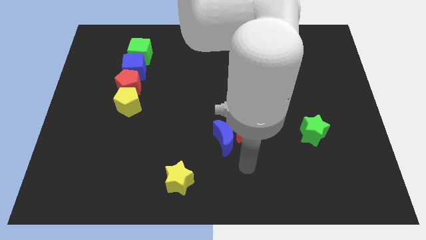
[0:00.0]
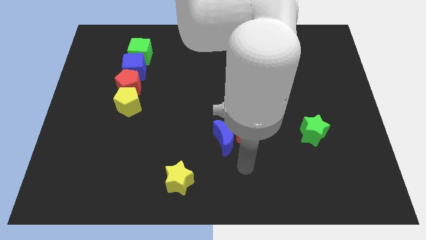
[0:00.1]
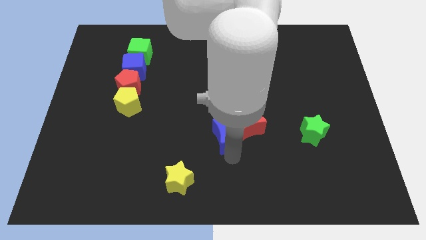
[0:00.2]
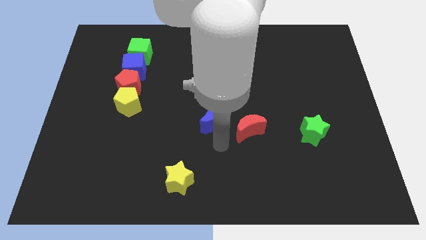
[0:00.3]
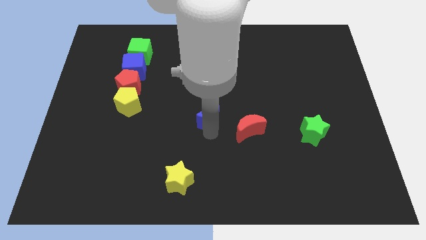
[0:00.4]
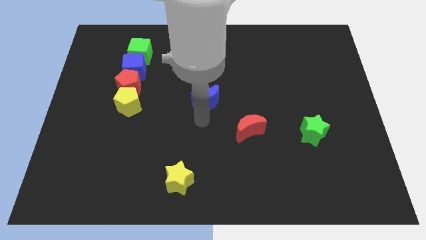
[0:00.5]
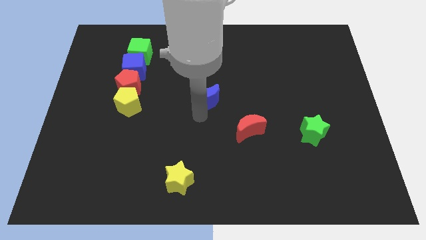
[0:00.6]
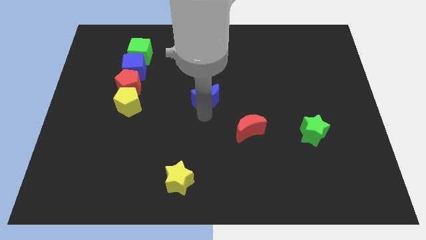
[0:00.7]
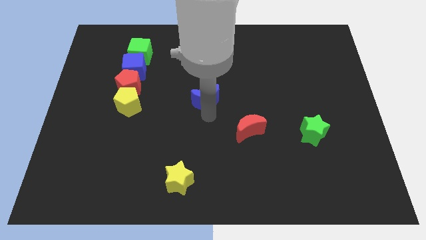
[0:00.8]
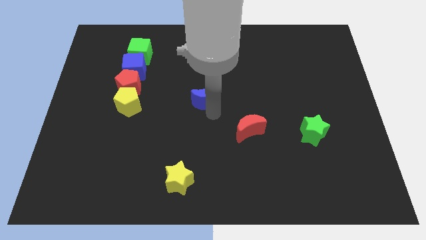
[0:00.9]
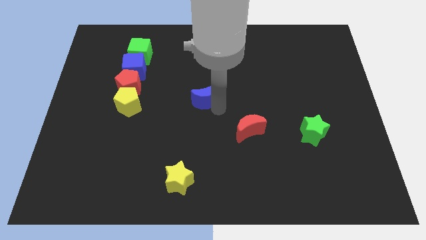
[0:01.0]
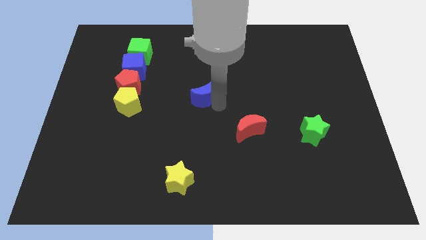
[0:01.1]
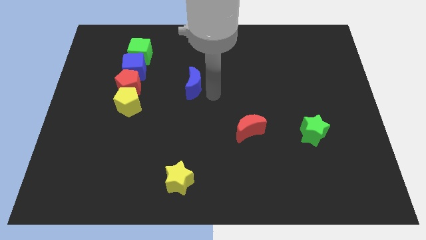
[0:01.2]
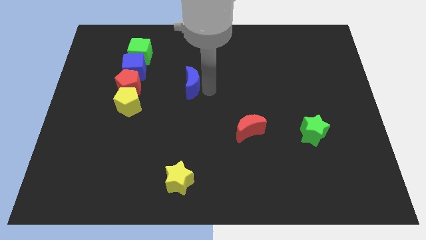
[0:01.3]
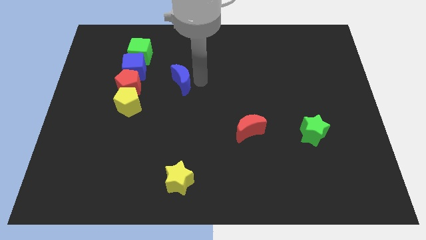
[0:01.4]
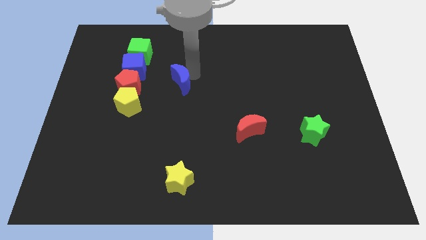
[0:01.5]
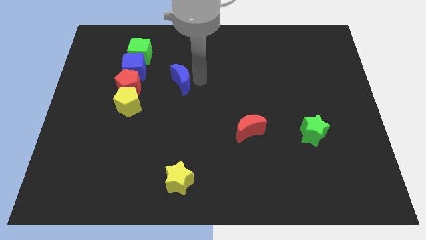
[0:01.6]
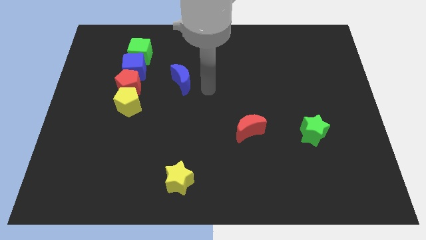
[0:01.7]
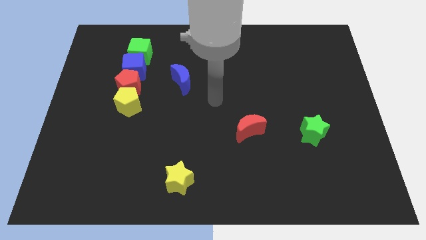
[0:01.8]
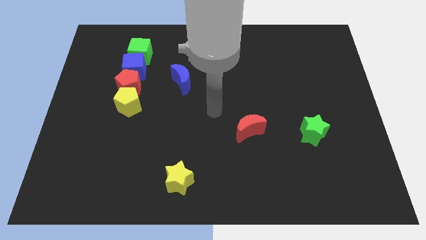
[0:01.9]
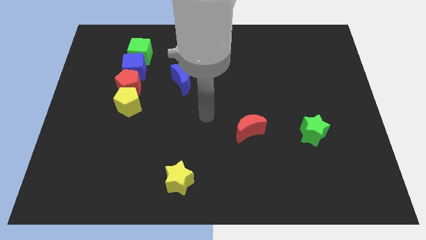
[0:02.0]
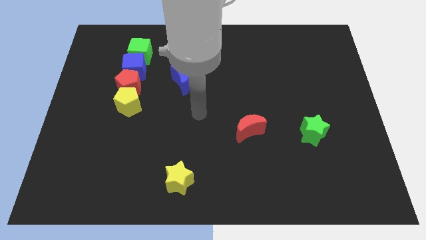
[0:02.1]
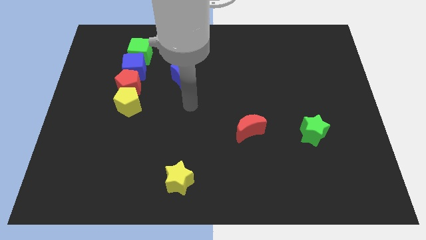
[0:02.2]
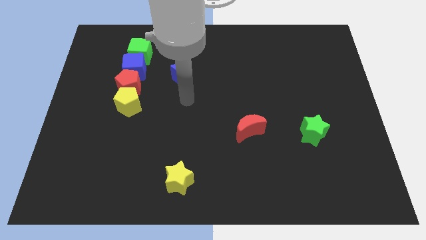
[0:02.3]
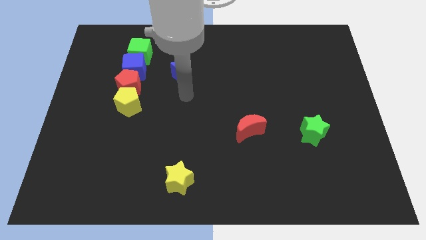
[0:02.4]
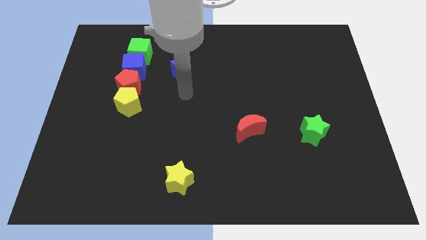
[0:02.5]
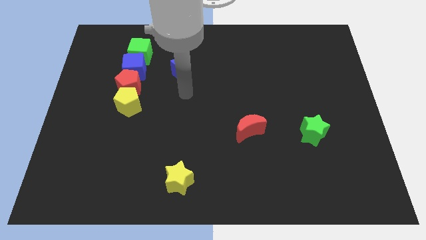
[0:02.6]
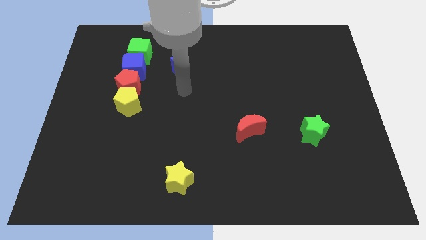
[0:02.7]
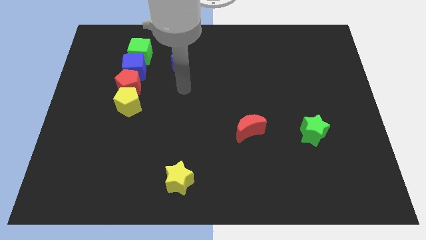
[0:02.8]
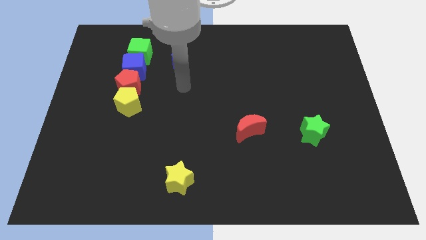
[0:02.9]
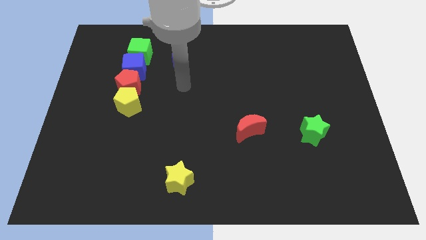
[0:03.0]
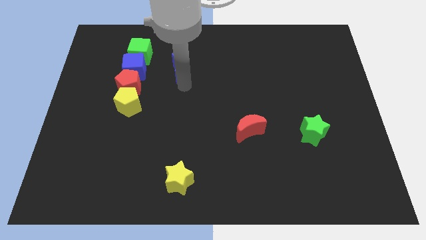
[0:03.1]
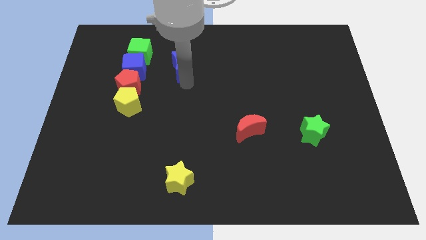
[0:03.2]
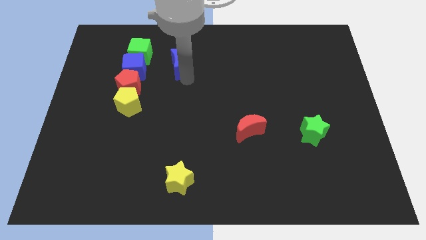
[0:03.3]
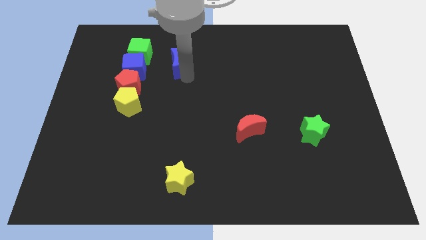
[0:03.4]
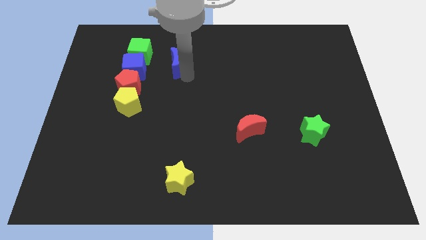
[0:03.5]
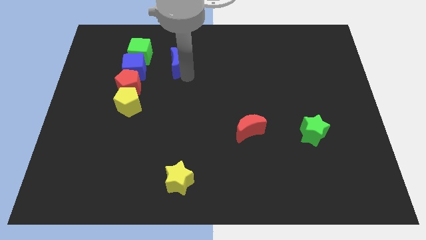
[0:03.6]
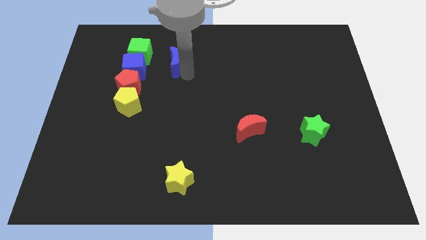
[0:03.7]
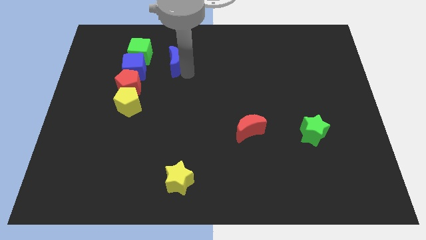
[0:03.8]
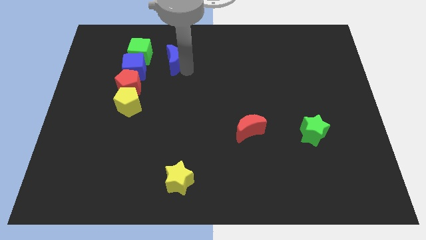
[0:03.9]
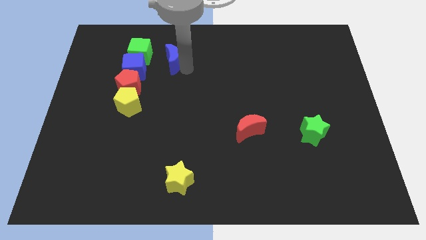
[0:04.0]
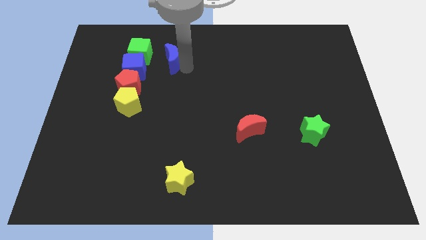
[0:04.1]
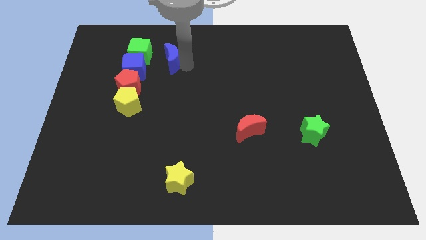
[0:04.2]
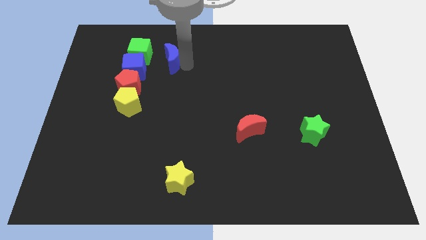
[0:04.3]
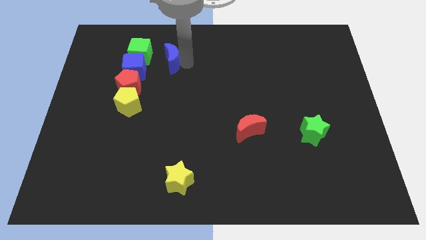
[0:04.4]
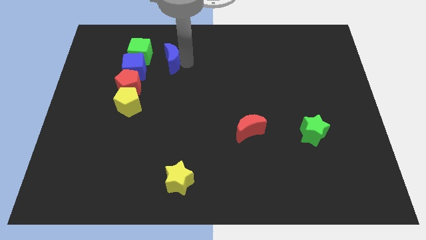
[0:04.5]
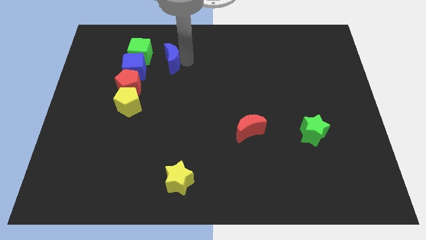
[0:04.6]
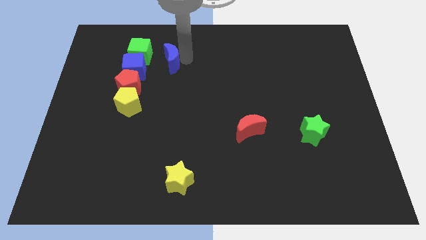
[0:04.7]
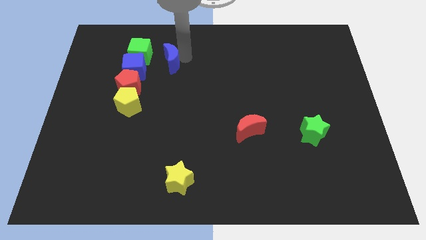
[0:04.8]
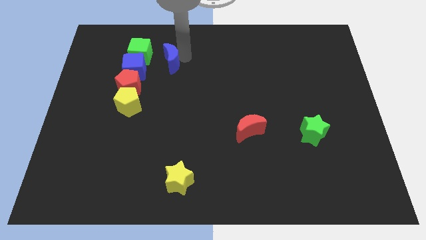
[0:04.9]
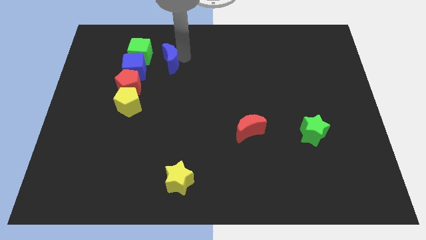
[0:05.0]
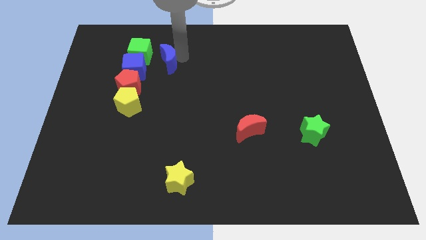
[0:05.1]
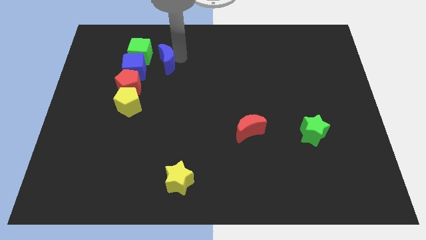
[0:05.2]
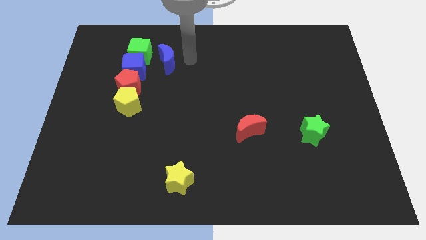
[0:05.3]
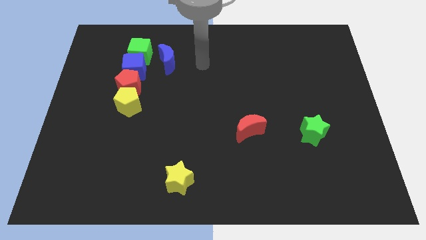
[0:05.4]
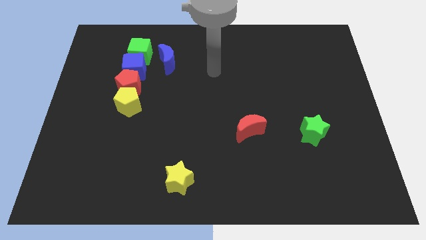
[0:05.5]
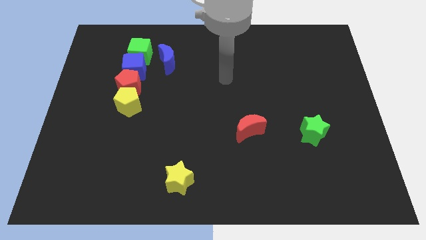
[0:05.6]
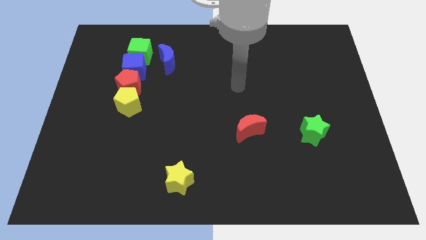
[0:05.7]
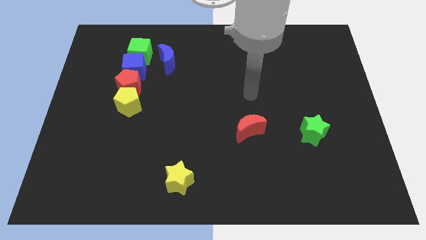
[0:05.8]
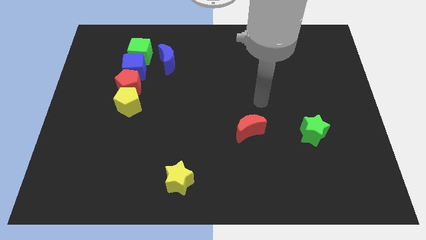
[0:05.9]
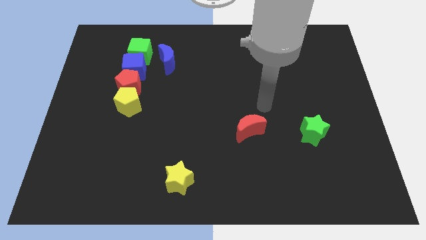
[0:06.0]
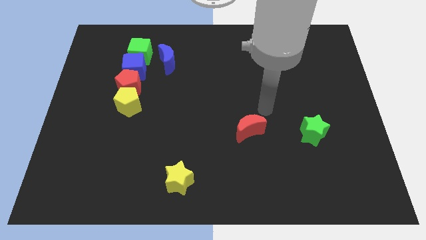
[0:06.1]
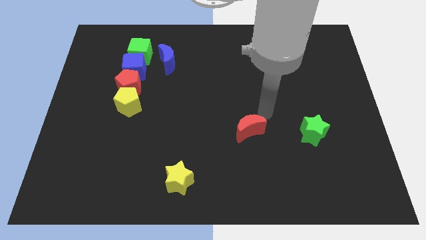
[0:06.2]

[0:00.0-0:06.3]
move the blue moon to the right of green cube

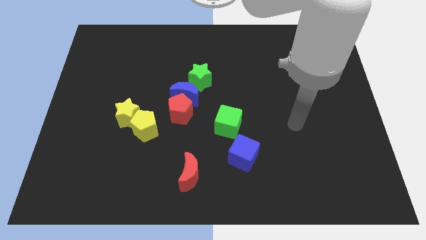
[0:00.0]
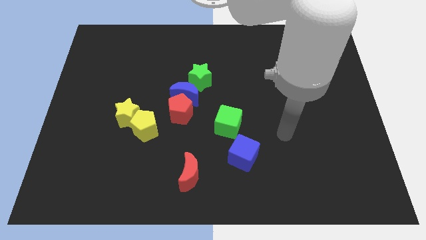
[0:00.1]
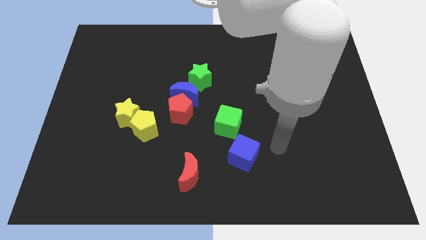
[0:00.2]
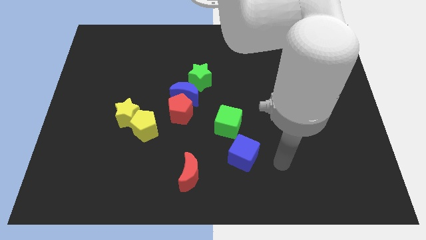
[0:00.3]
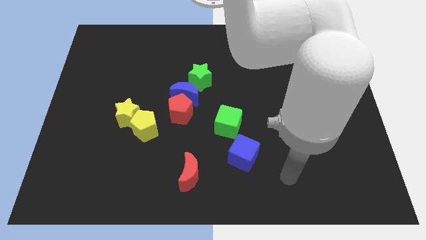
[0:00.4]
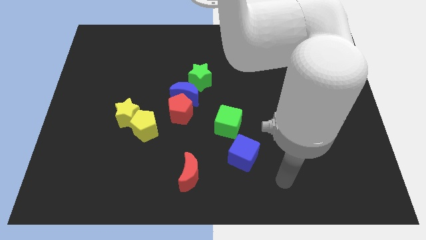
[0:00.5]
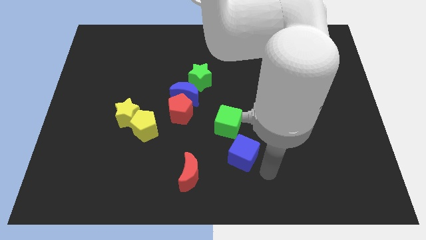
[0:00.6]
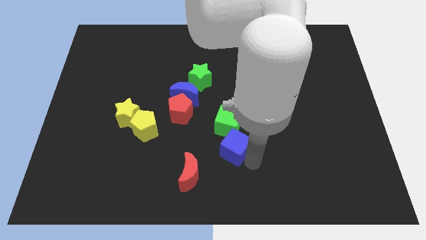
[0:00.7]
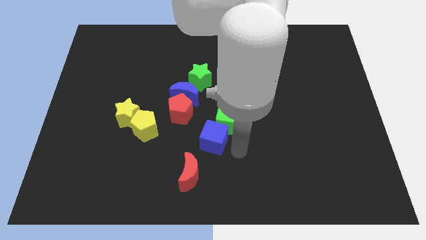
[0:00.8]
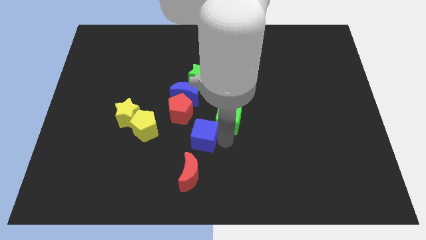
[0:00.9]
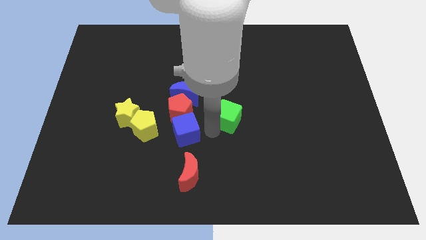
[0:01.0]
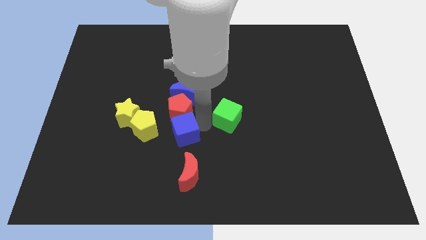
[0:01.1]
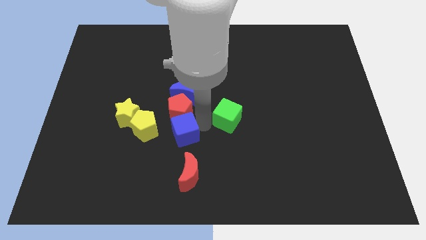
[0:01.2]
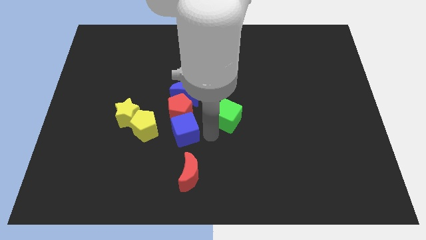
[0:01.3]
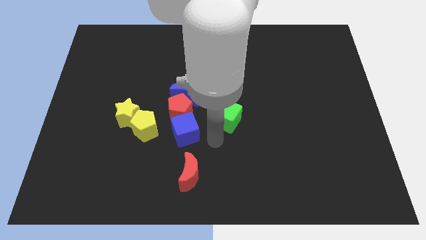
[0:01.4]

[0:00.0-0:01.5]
separate blue cube and green cube

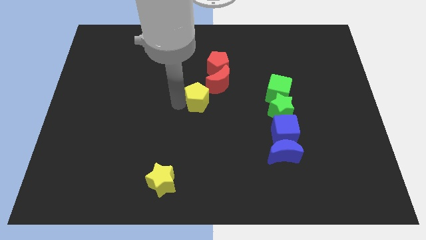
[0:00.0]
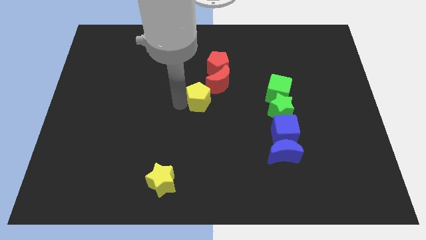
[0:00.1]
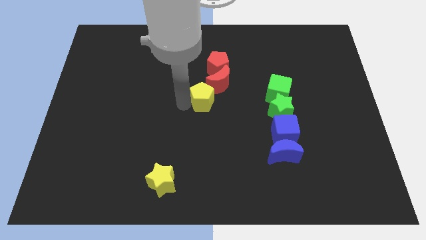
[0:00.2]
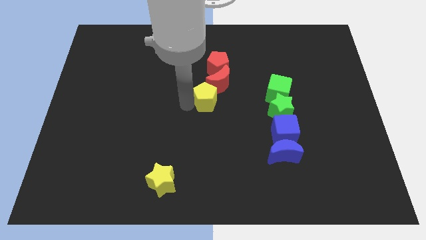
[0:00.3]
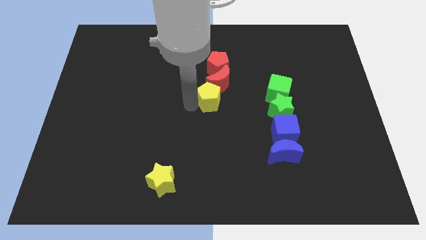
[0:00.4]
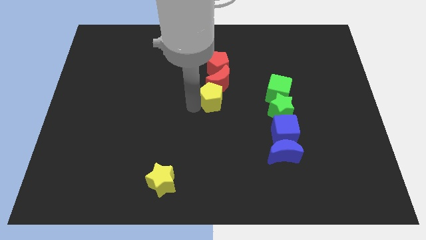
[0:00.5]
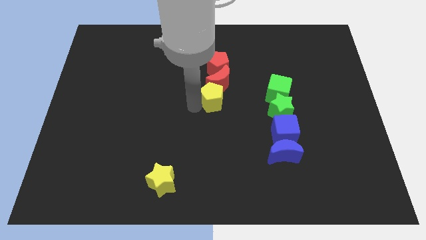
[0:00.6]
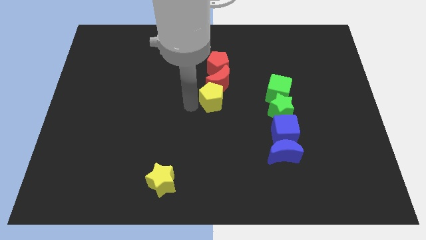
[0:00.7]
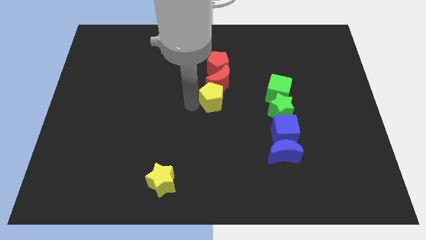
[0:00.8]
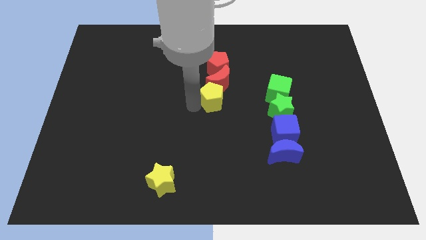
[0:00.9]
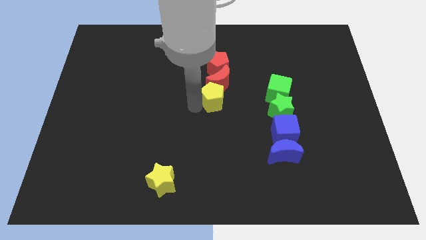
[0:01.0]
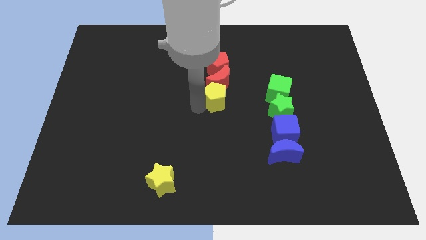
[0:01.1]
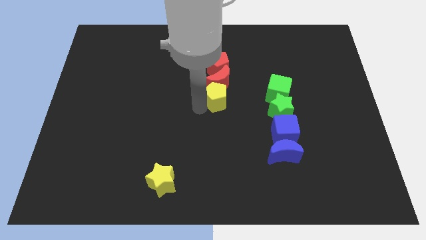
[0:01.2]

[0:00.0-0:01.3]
slide the yellow pentagon below the red moon
